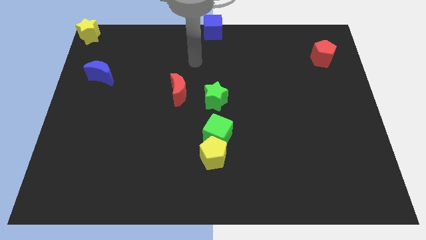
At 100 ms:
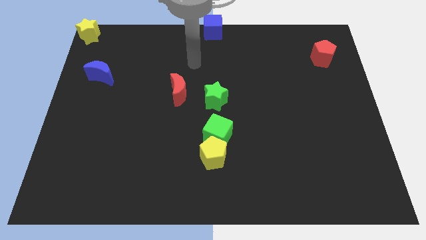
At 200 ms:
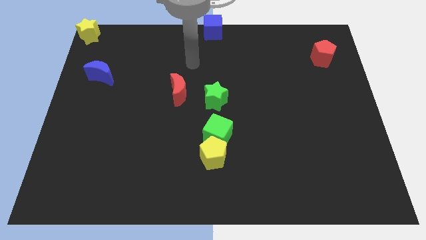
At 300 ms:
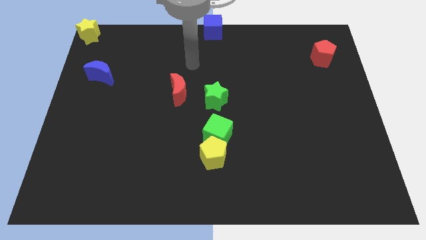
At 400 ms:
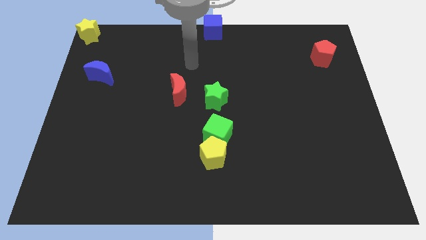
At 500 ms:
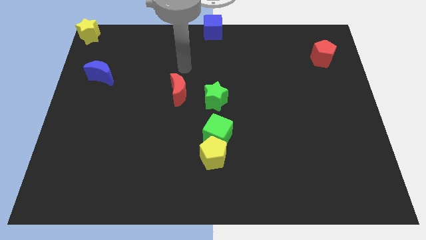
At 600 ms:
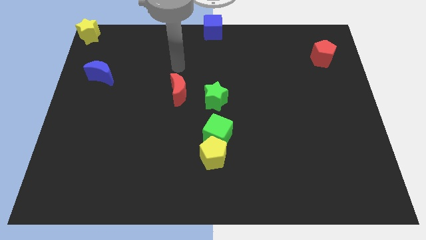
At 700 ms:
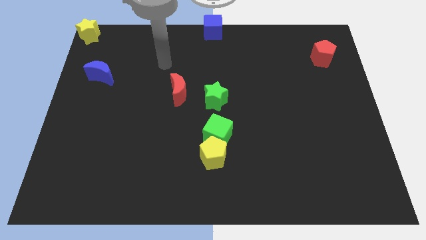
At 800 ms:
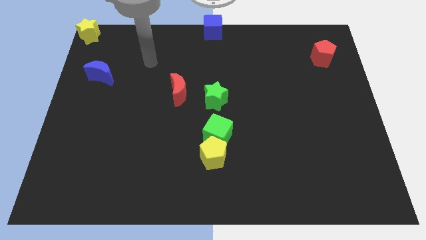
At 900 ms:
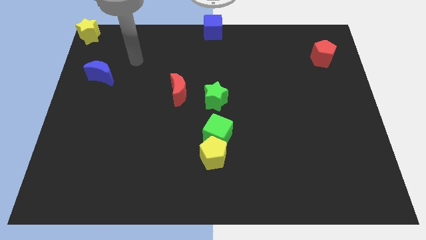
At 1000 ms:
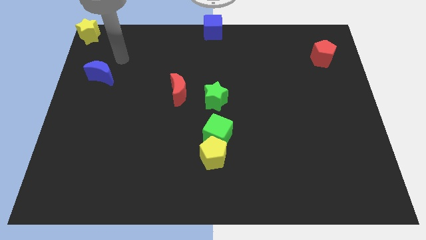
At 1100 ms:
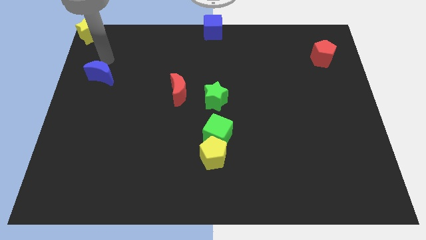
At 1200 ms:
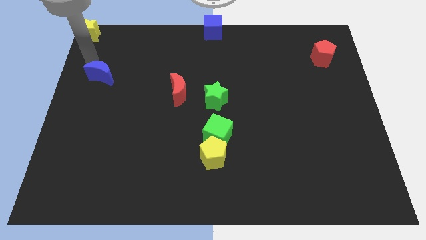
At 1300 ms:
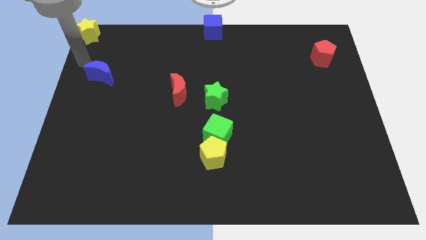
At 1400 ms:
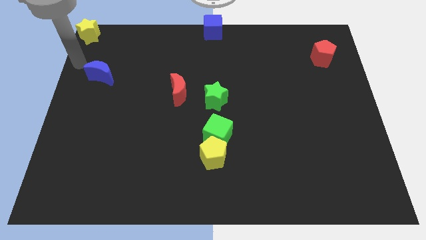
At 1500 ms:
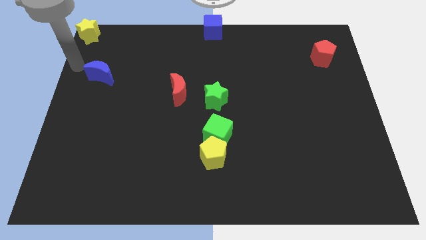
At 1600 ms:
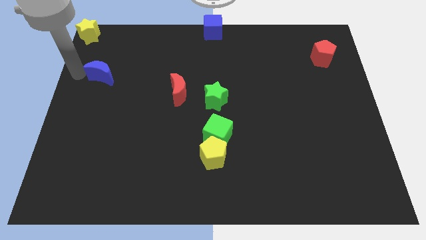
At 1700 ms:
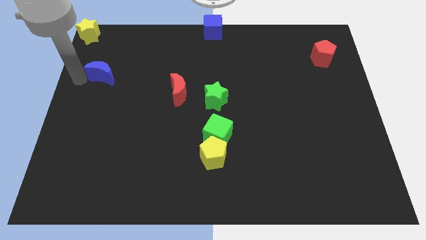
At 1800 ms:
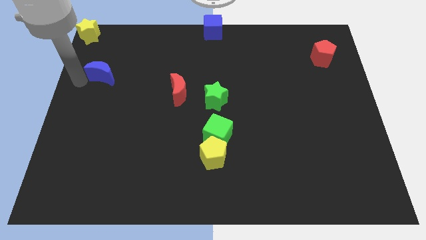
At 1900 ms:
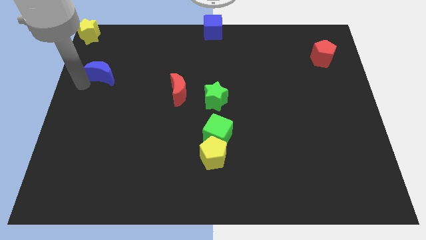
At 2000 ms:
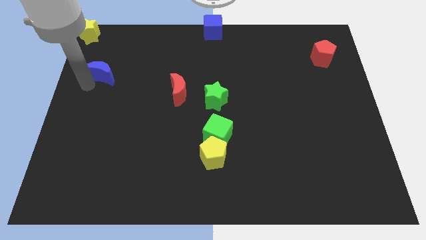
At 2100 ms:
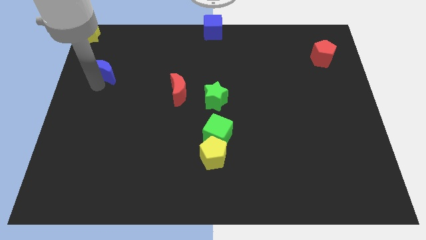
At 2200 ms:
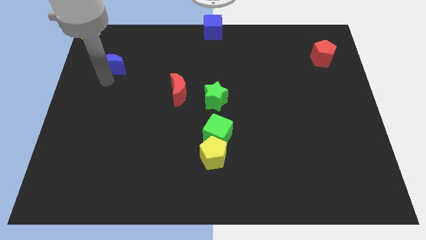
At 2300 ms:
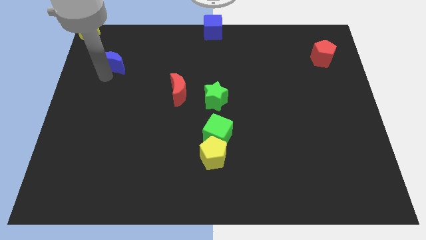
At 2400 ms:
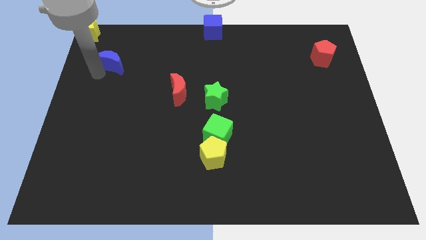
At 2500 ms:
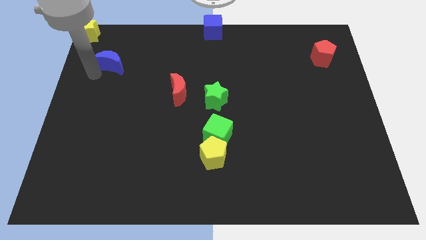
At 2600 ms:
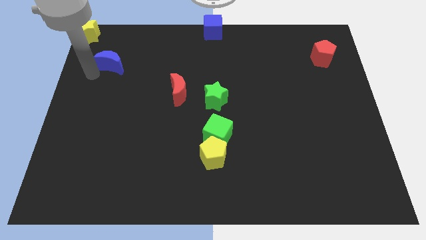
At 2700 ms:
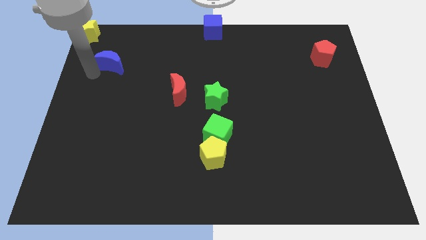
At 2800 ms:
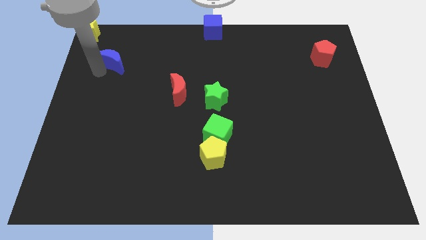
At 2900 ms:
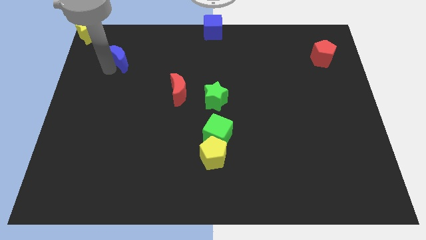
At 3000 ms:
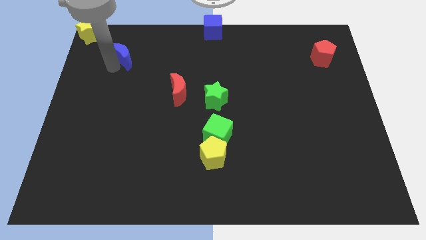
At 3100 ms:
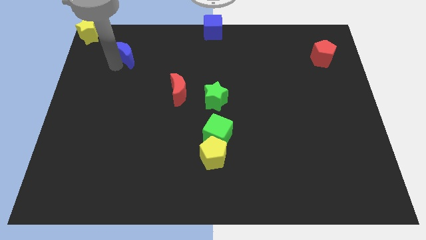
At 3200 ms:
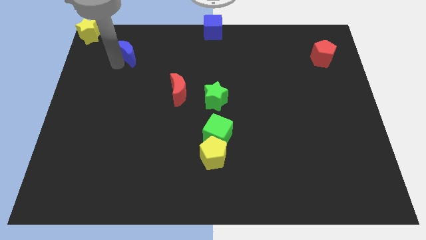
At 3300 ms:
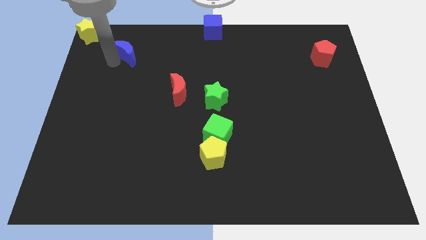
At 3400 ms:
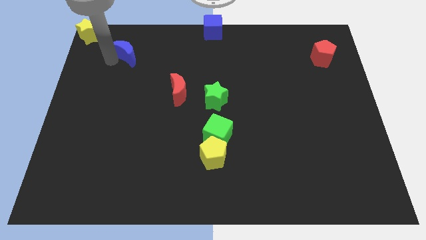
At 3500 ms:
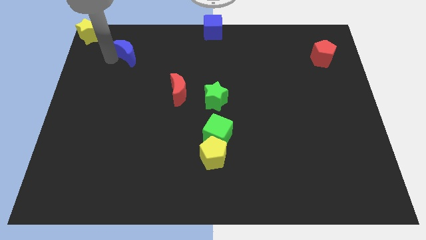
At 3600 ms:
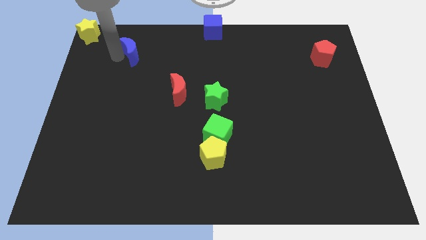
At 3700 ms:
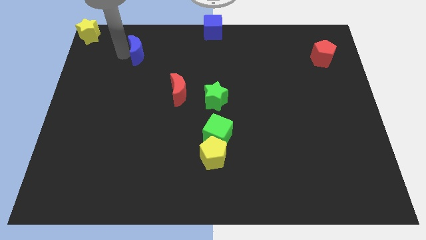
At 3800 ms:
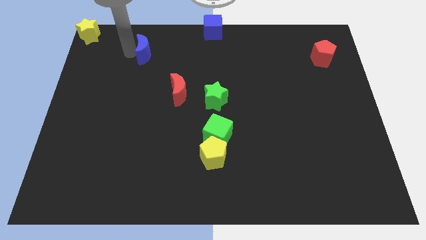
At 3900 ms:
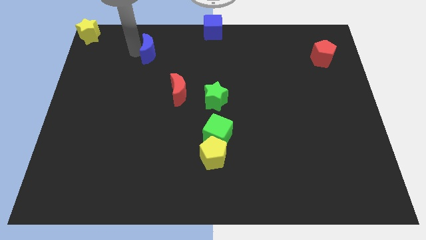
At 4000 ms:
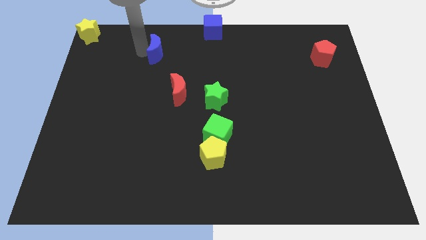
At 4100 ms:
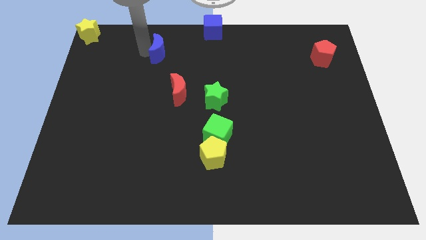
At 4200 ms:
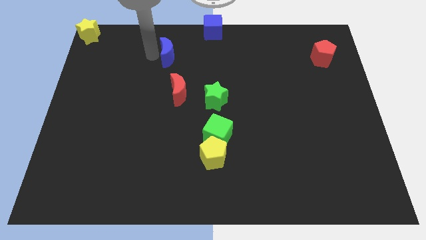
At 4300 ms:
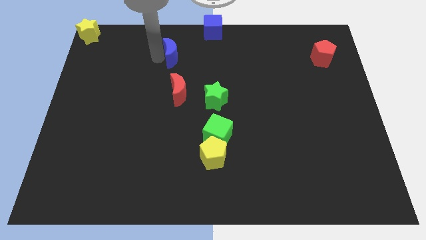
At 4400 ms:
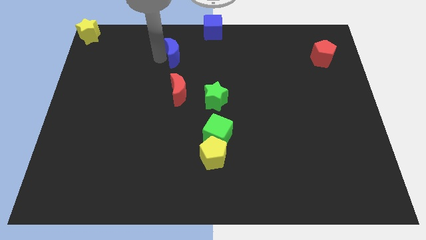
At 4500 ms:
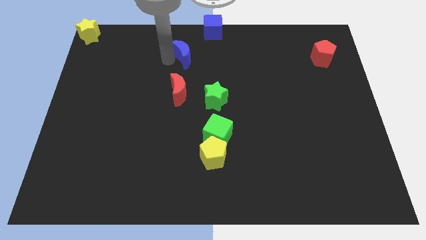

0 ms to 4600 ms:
move the blue crescent to the top side of the red crescent

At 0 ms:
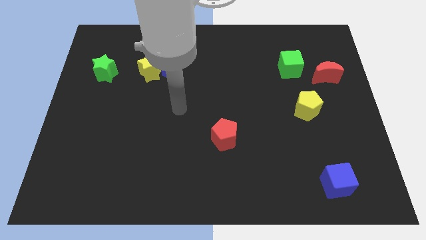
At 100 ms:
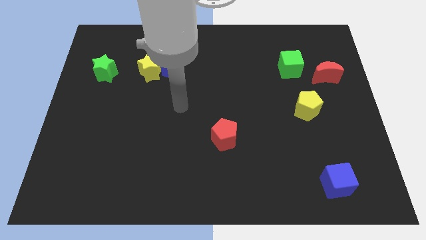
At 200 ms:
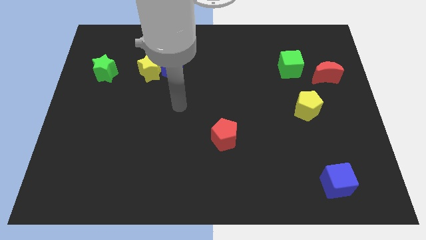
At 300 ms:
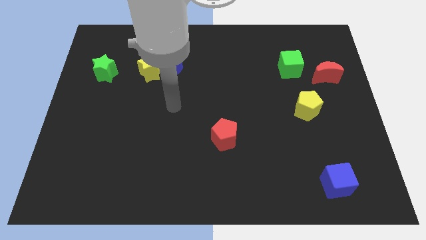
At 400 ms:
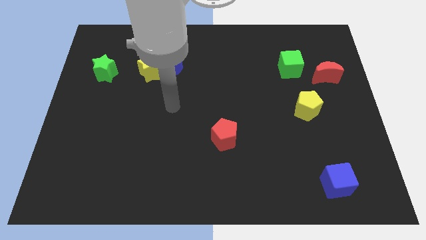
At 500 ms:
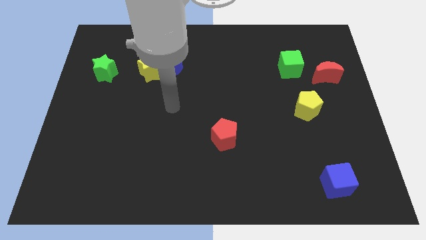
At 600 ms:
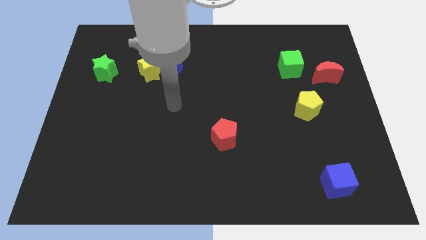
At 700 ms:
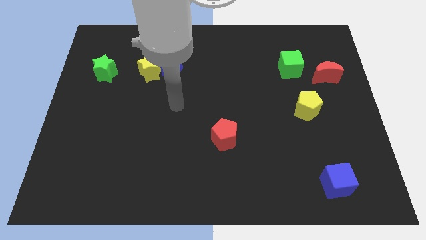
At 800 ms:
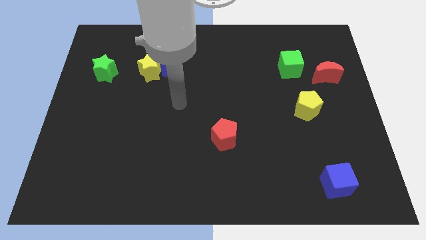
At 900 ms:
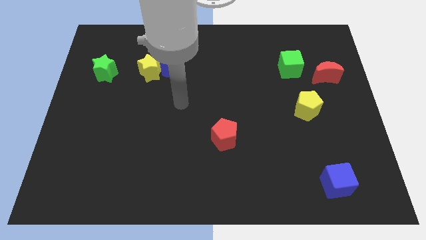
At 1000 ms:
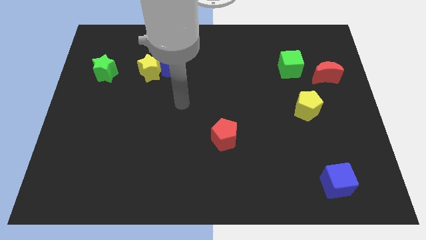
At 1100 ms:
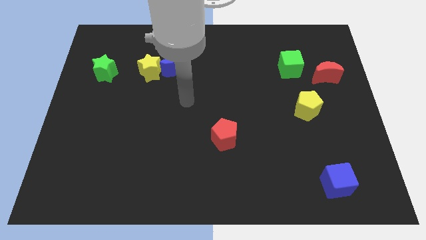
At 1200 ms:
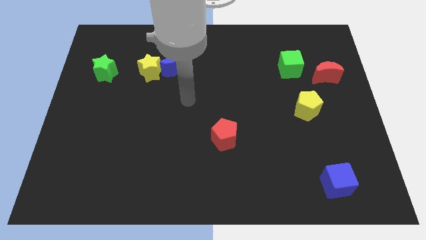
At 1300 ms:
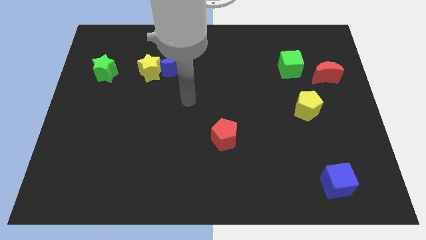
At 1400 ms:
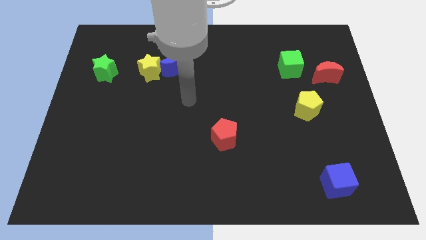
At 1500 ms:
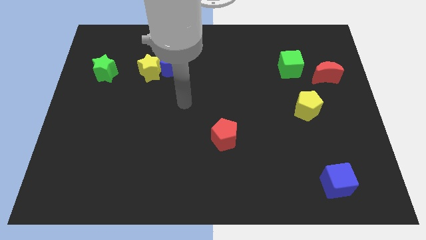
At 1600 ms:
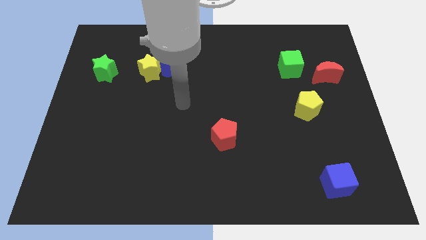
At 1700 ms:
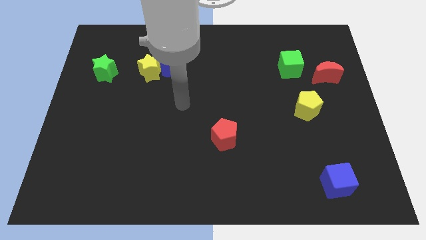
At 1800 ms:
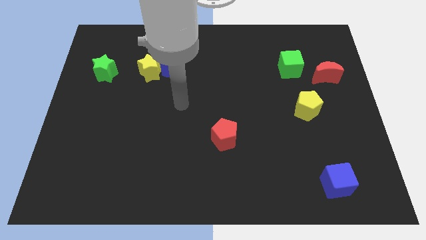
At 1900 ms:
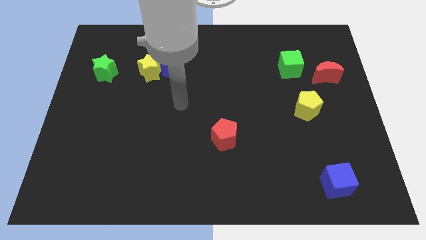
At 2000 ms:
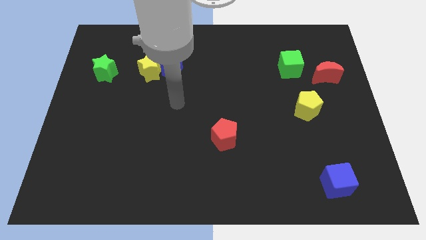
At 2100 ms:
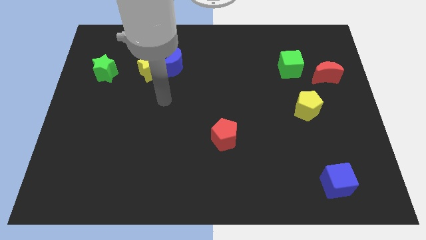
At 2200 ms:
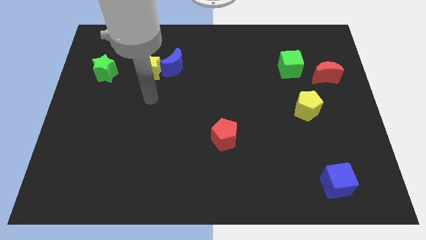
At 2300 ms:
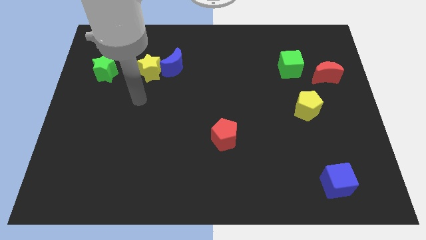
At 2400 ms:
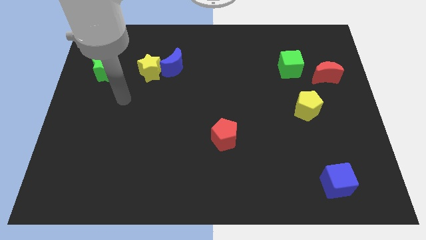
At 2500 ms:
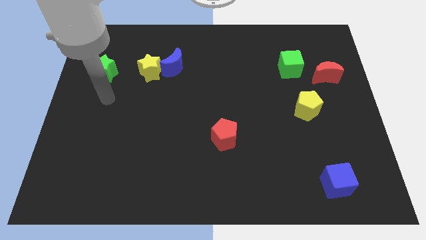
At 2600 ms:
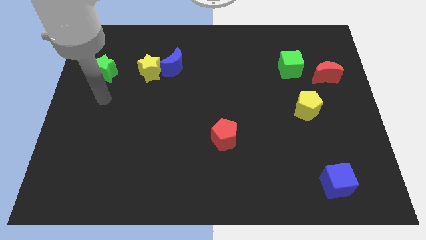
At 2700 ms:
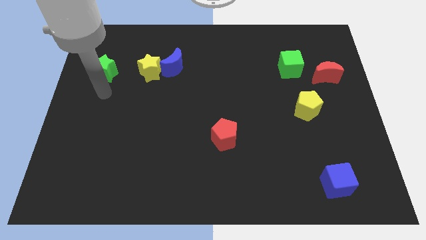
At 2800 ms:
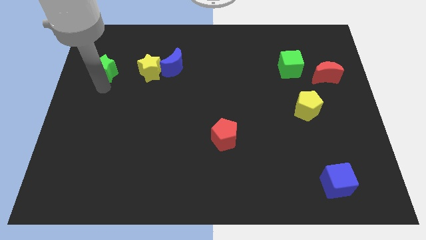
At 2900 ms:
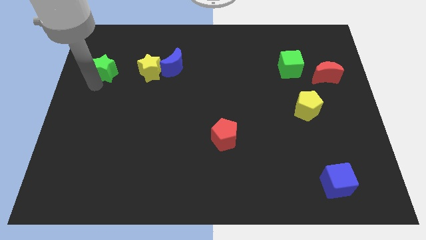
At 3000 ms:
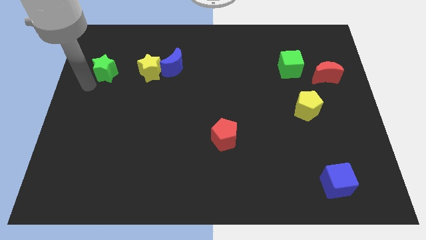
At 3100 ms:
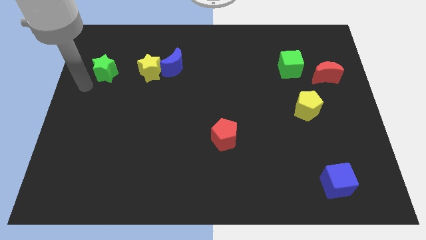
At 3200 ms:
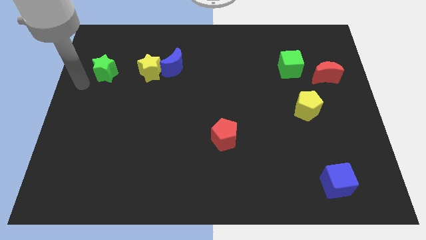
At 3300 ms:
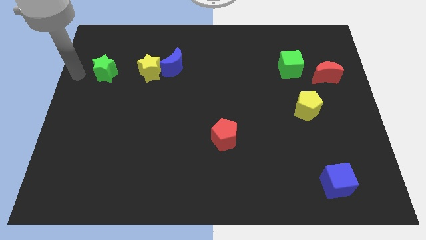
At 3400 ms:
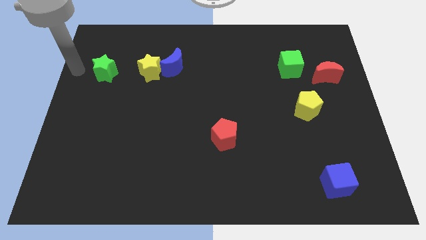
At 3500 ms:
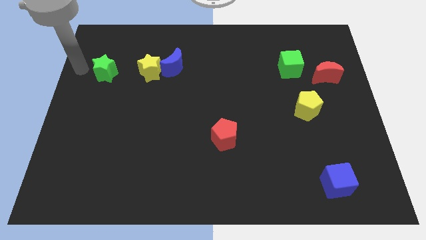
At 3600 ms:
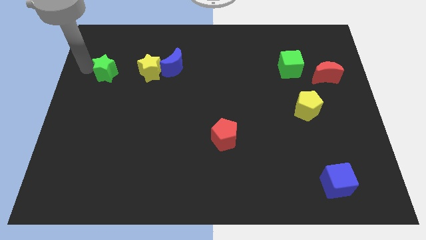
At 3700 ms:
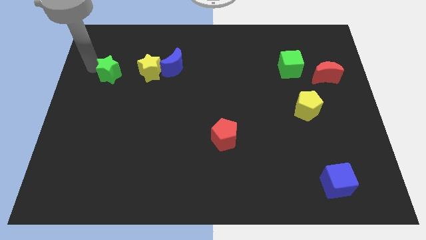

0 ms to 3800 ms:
place your arm left to the green star

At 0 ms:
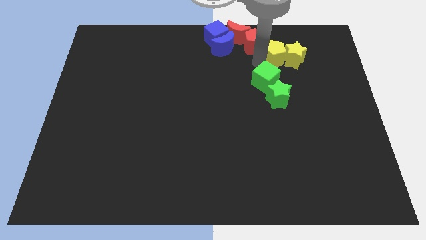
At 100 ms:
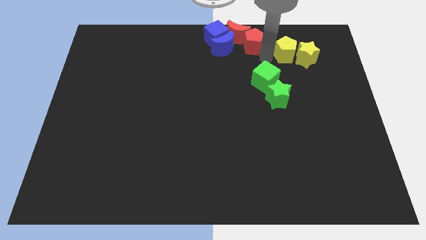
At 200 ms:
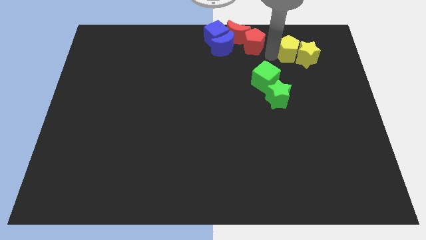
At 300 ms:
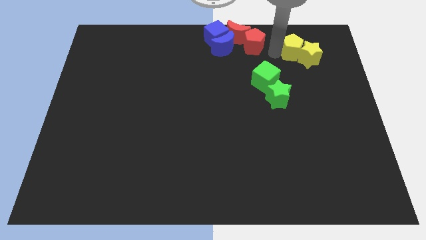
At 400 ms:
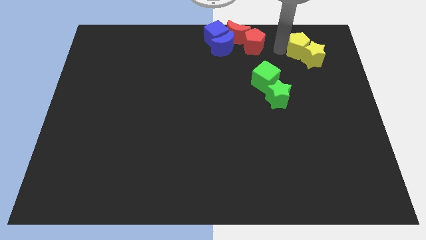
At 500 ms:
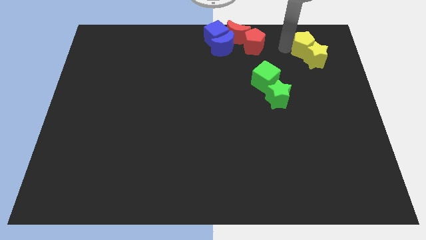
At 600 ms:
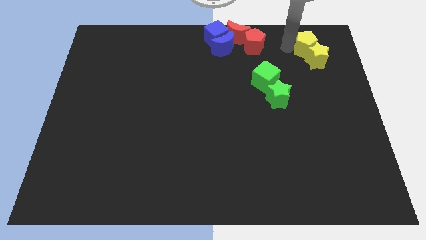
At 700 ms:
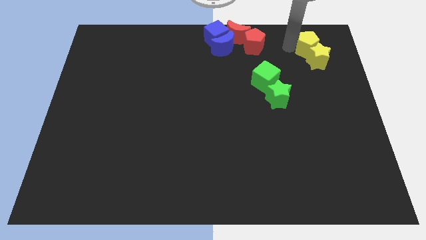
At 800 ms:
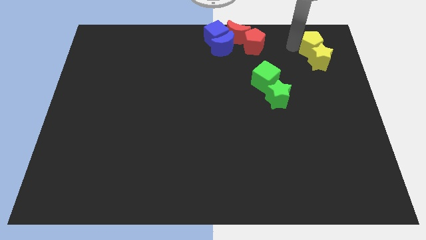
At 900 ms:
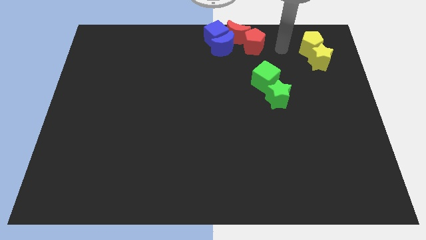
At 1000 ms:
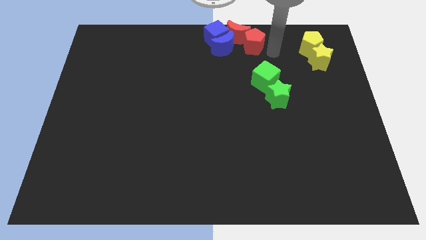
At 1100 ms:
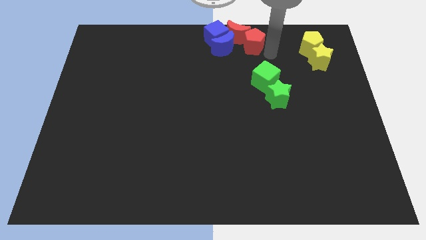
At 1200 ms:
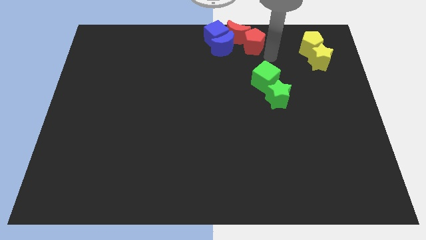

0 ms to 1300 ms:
push the yellow pentagon into the yellow star
